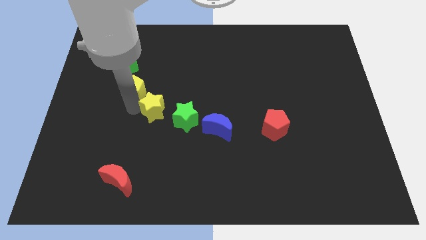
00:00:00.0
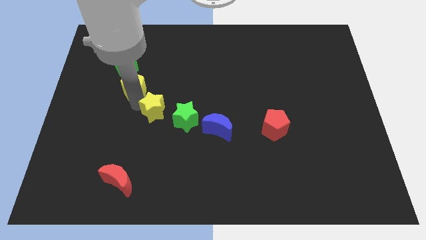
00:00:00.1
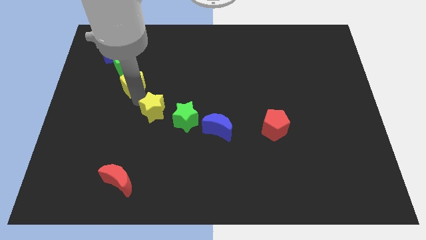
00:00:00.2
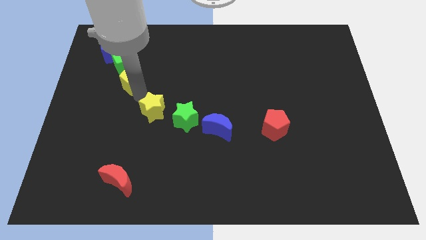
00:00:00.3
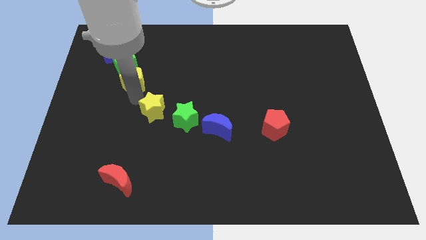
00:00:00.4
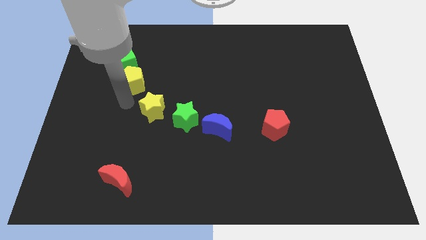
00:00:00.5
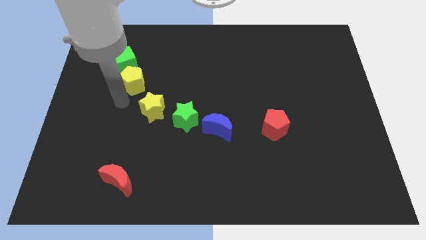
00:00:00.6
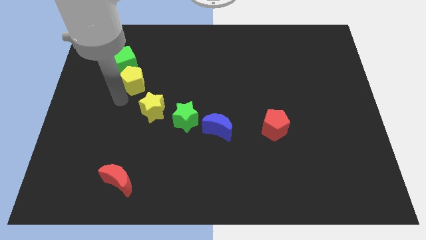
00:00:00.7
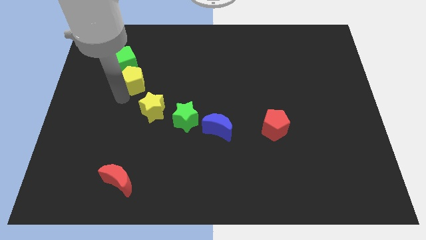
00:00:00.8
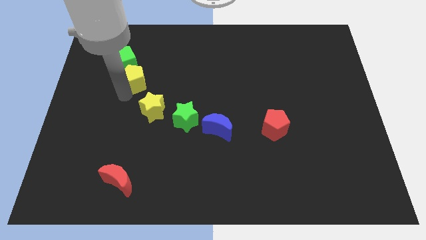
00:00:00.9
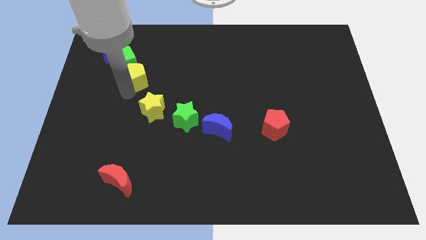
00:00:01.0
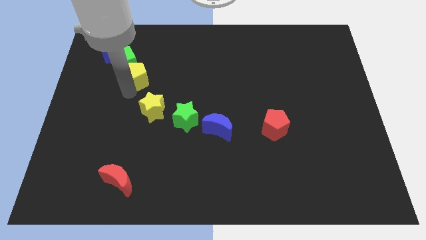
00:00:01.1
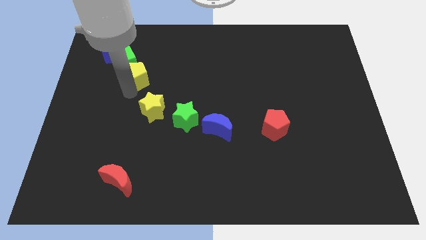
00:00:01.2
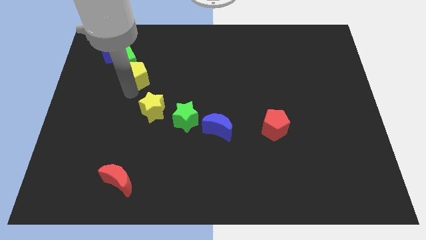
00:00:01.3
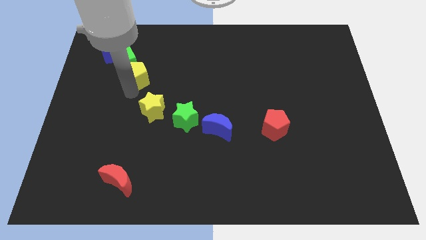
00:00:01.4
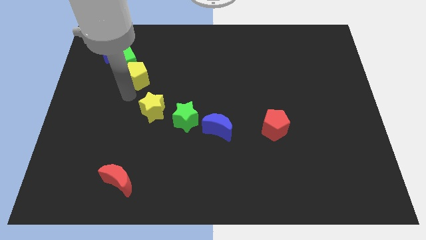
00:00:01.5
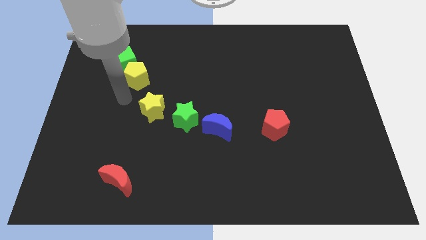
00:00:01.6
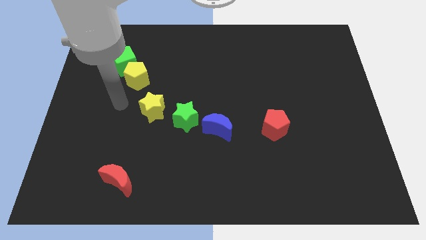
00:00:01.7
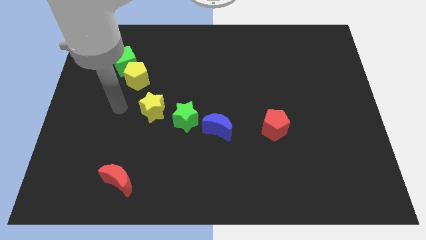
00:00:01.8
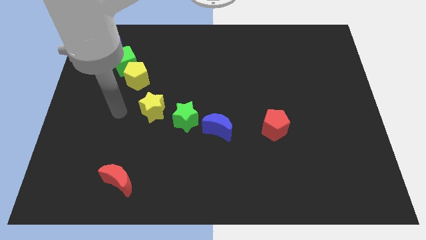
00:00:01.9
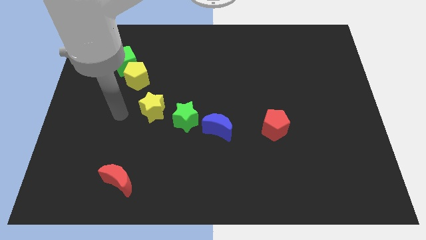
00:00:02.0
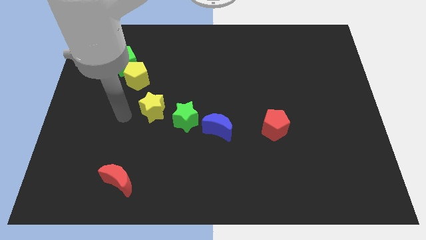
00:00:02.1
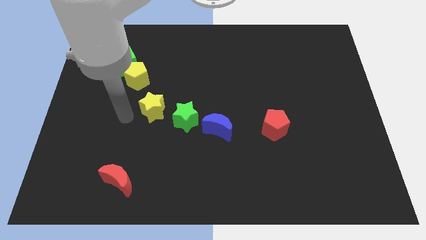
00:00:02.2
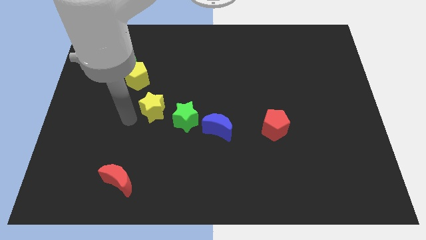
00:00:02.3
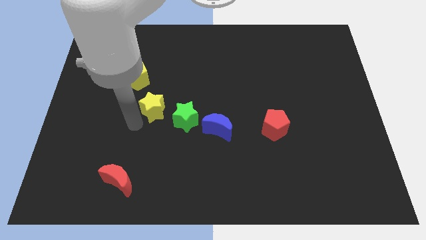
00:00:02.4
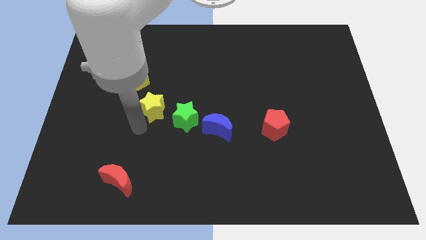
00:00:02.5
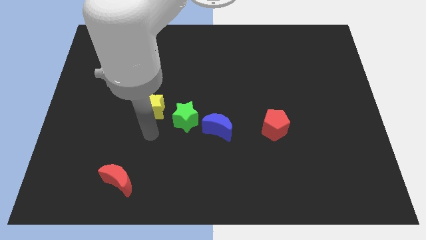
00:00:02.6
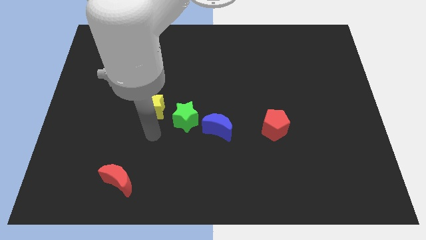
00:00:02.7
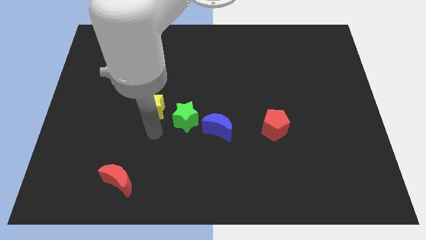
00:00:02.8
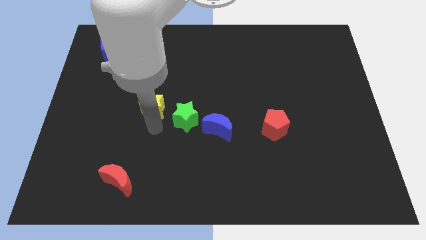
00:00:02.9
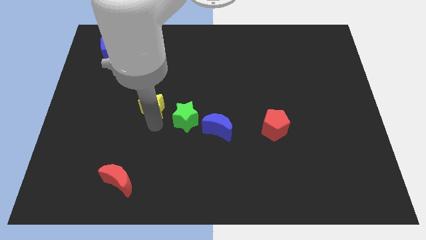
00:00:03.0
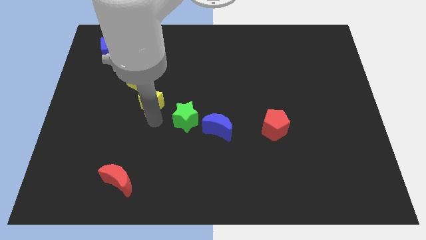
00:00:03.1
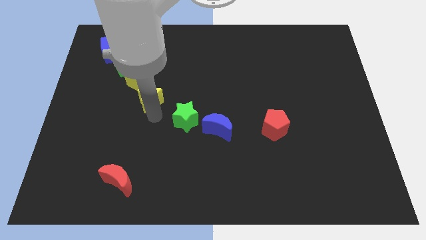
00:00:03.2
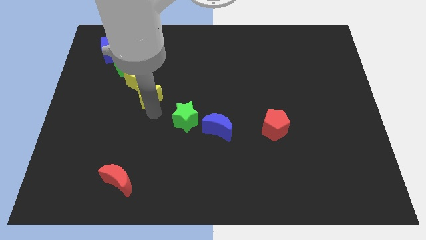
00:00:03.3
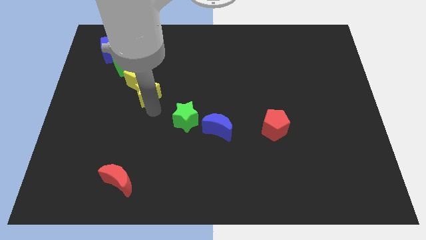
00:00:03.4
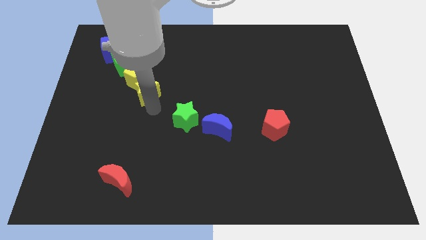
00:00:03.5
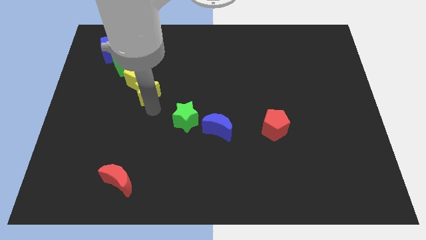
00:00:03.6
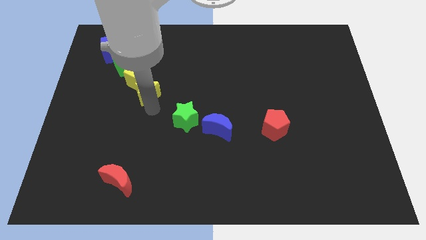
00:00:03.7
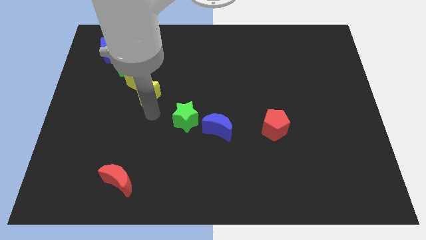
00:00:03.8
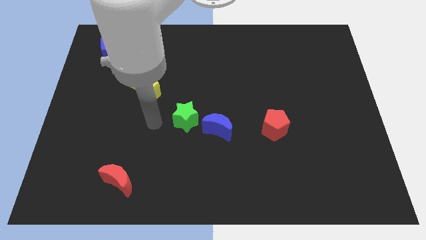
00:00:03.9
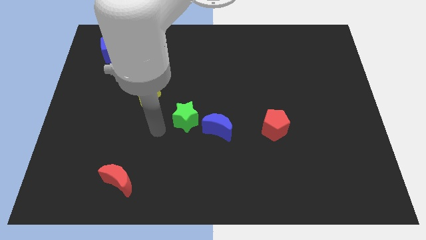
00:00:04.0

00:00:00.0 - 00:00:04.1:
push the yellow blocks diagonal below green cube

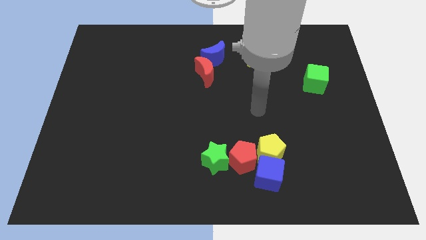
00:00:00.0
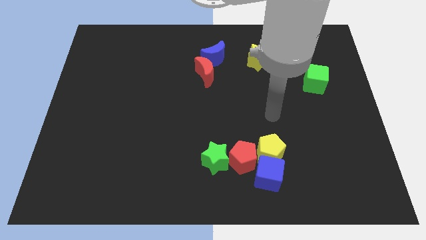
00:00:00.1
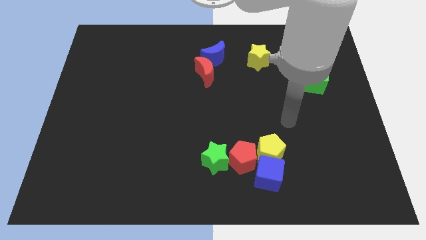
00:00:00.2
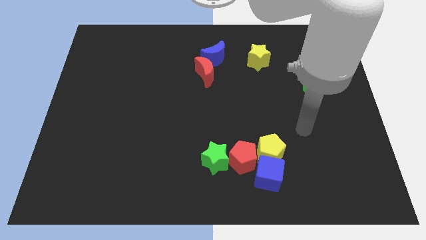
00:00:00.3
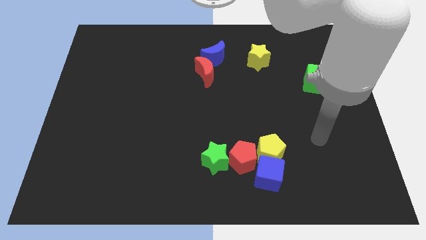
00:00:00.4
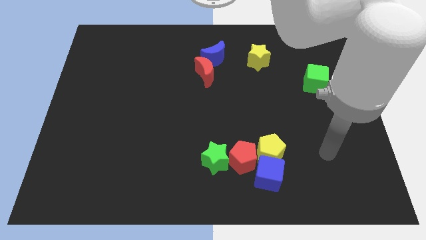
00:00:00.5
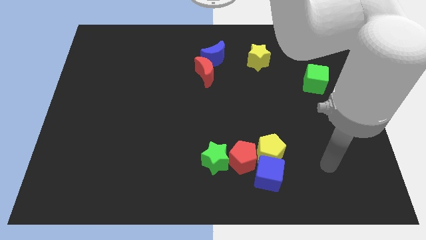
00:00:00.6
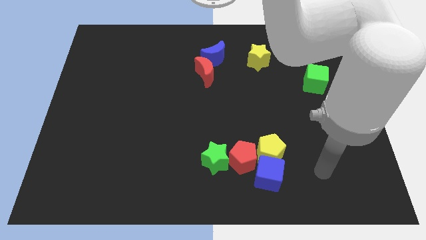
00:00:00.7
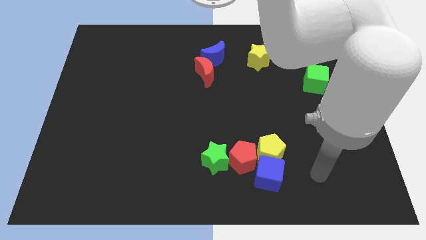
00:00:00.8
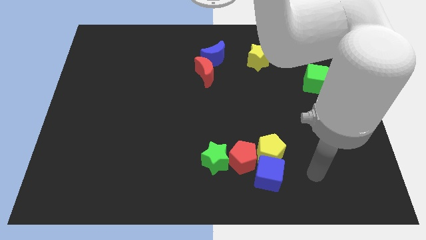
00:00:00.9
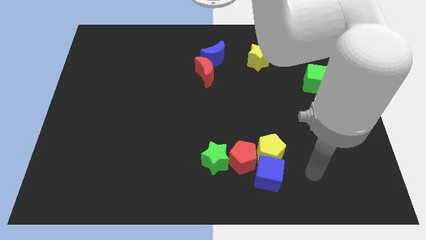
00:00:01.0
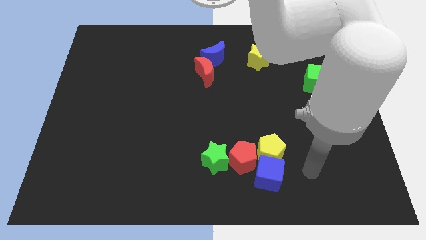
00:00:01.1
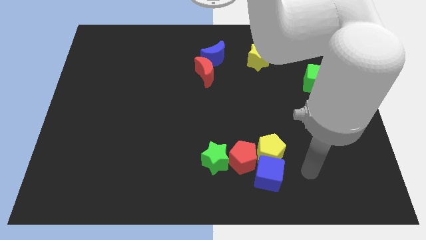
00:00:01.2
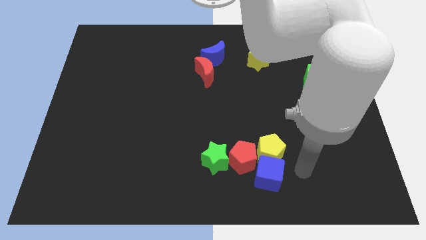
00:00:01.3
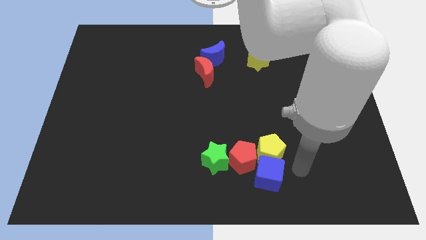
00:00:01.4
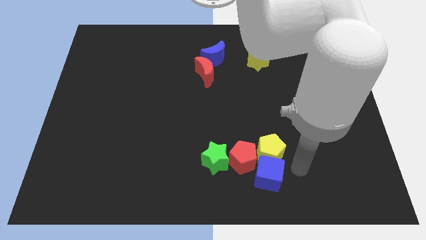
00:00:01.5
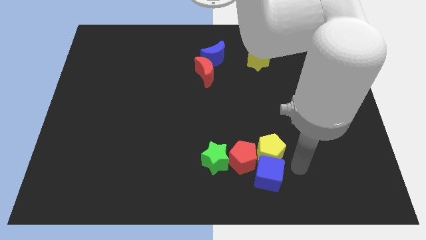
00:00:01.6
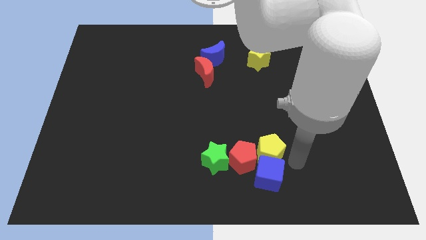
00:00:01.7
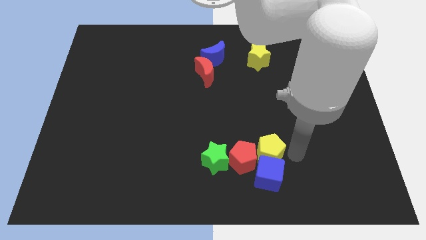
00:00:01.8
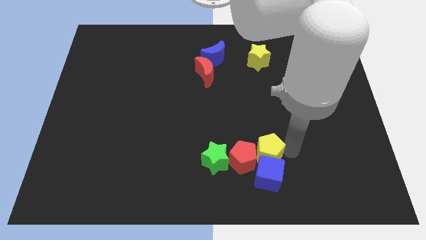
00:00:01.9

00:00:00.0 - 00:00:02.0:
move your arm towards the right of the yellow pentagon

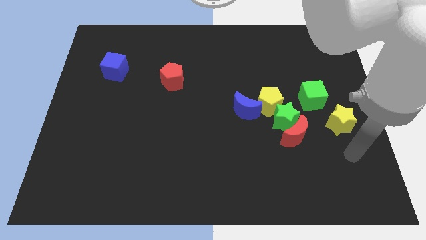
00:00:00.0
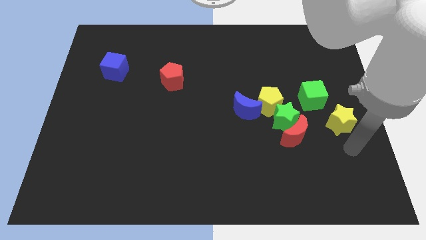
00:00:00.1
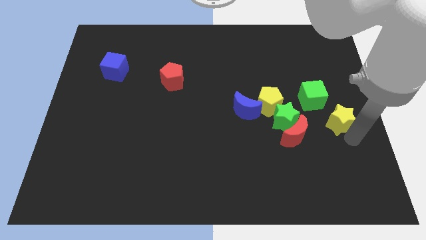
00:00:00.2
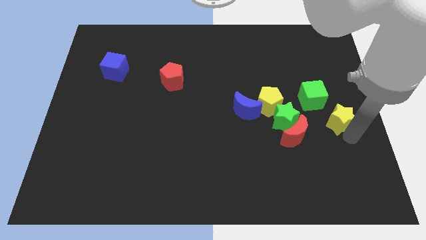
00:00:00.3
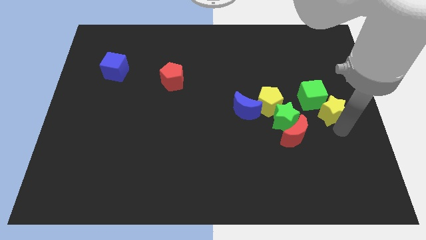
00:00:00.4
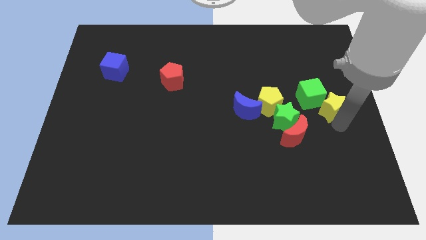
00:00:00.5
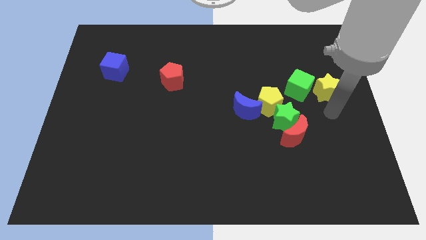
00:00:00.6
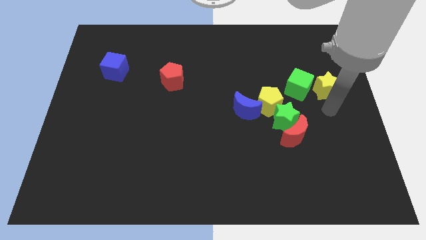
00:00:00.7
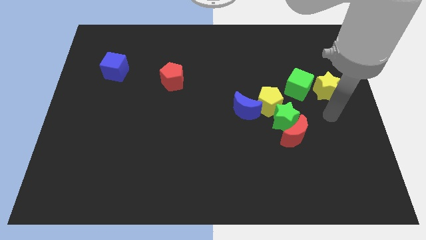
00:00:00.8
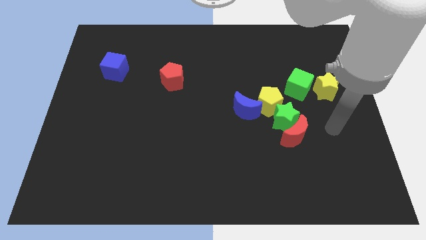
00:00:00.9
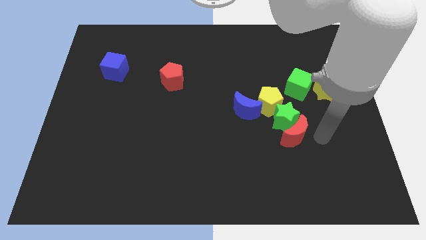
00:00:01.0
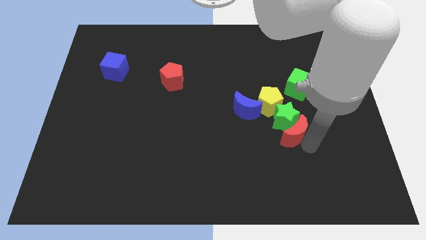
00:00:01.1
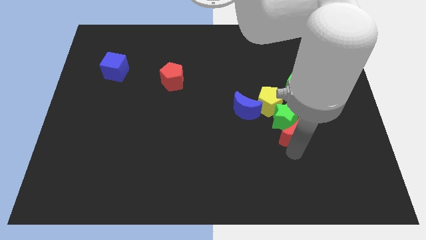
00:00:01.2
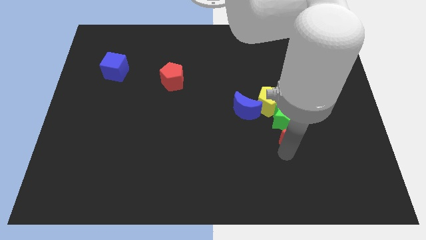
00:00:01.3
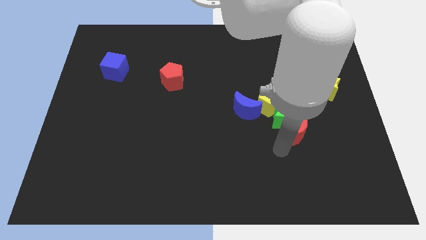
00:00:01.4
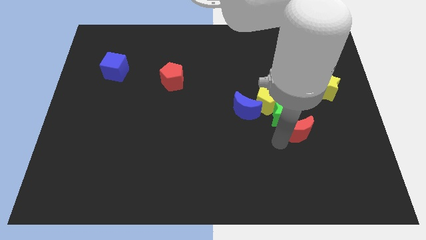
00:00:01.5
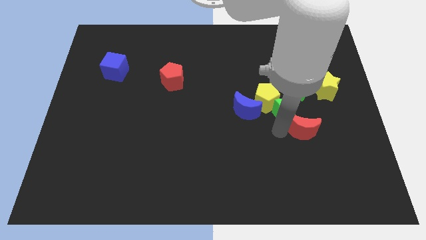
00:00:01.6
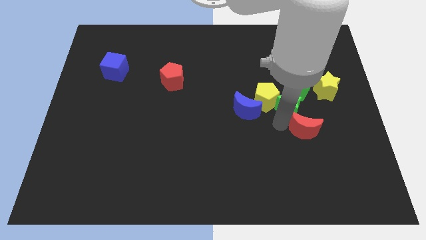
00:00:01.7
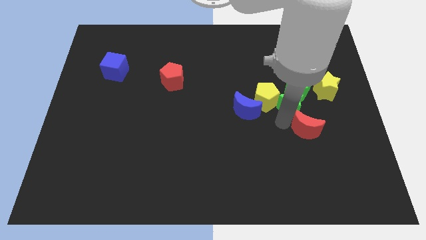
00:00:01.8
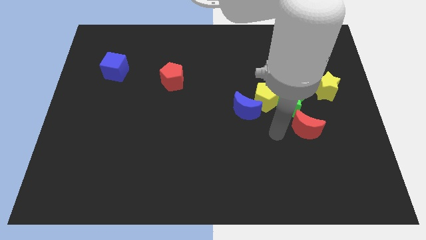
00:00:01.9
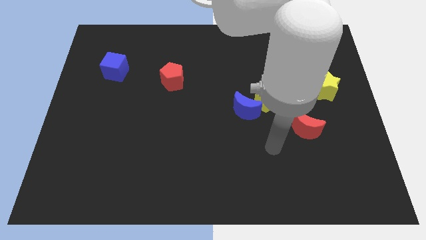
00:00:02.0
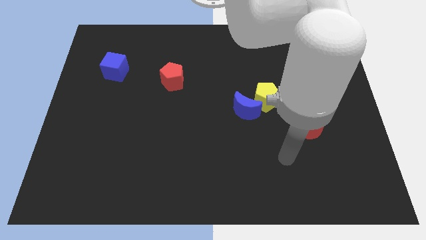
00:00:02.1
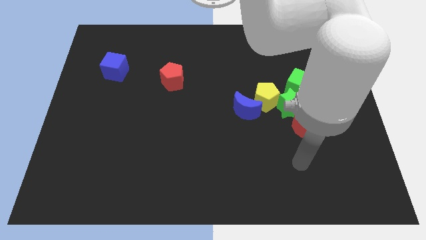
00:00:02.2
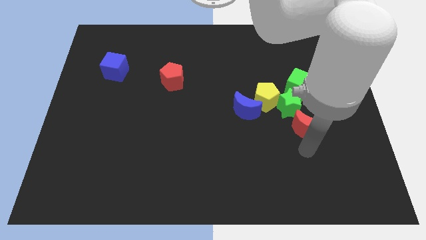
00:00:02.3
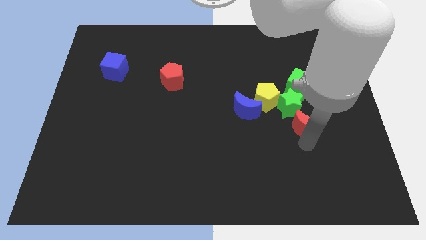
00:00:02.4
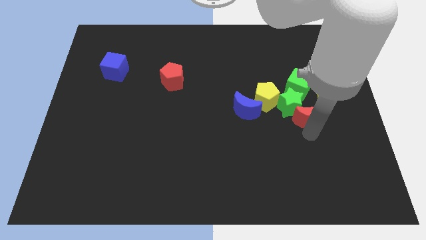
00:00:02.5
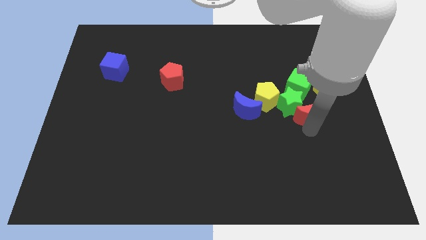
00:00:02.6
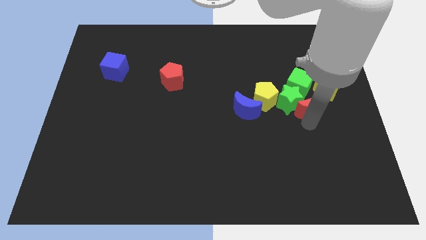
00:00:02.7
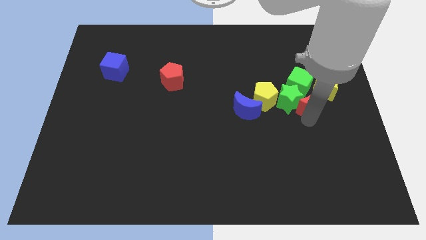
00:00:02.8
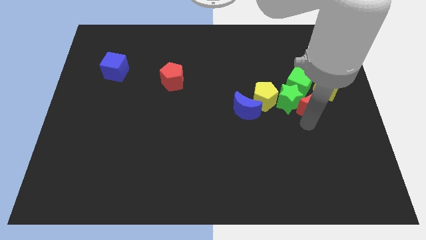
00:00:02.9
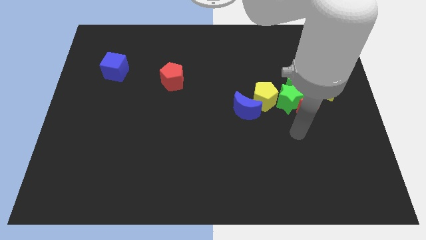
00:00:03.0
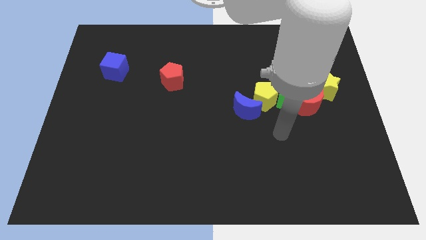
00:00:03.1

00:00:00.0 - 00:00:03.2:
push the group of blocks top side
